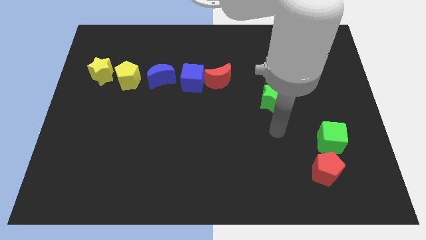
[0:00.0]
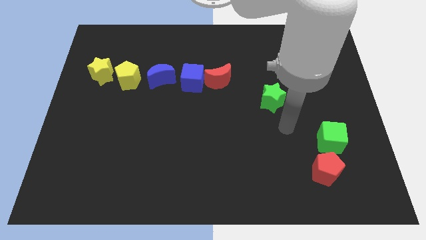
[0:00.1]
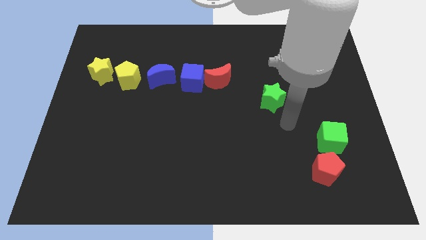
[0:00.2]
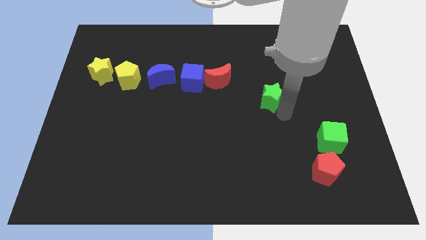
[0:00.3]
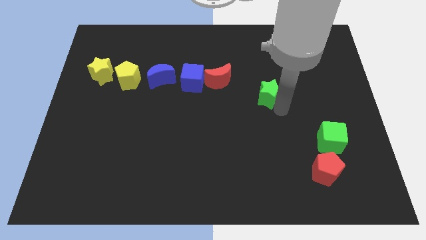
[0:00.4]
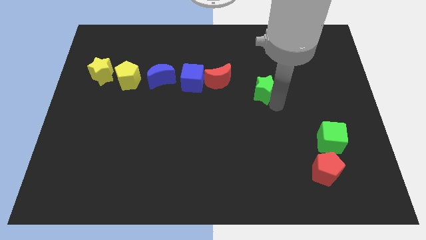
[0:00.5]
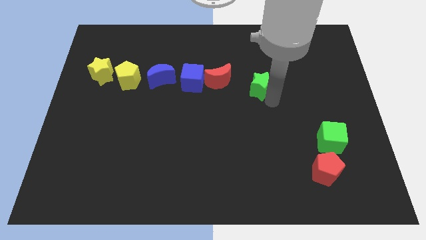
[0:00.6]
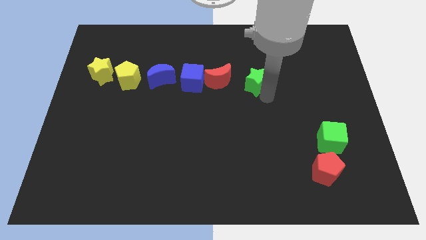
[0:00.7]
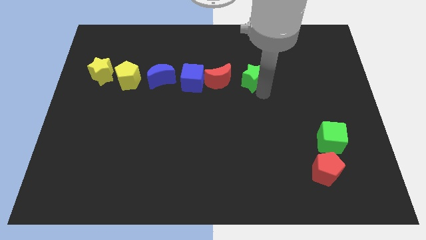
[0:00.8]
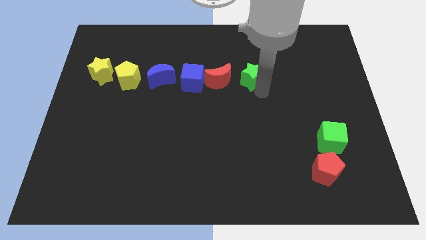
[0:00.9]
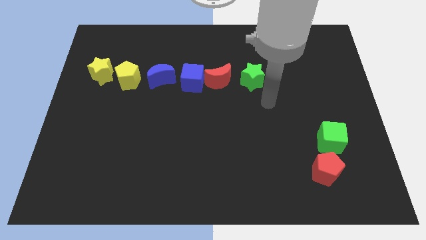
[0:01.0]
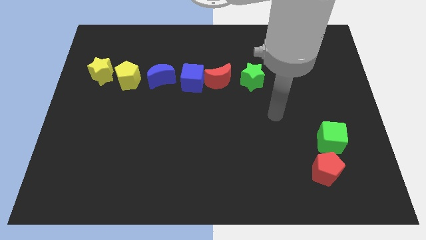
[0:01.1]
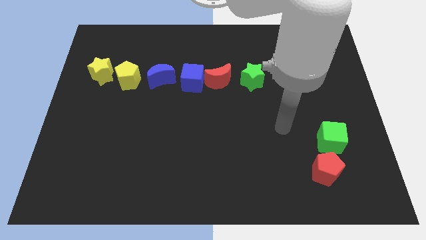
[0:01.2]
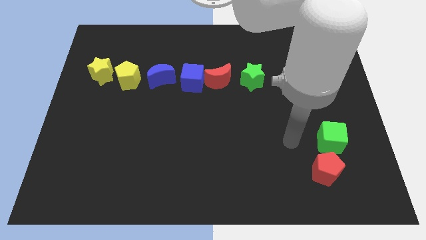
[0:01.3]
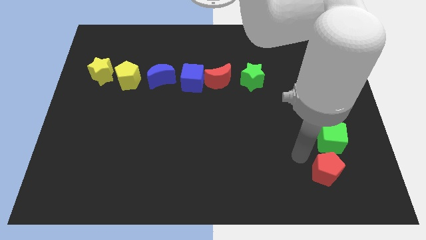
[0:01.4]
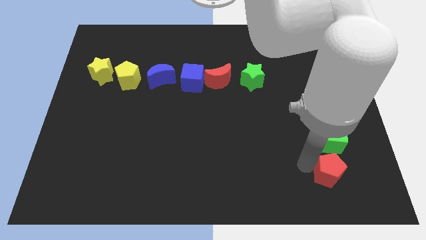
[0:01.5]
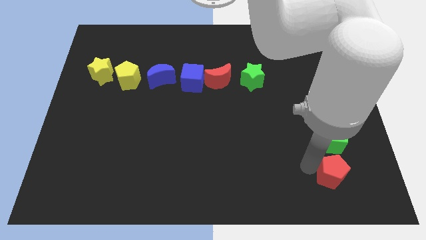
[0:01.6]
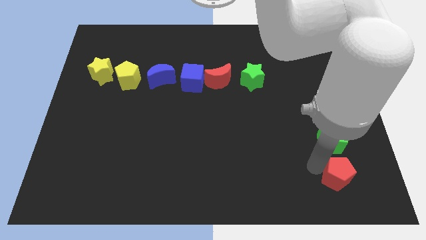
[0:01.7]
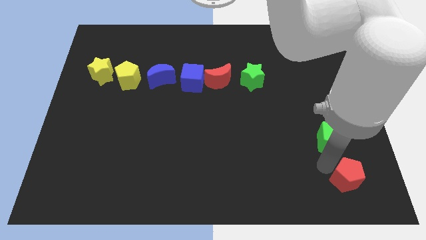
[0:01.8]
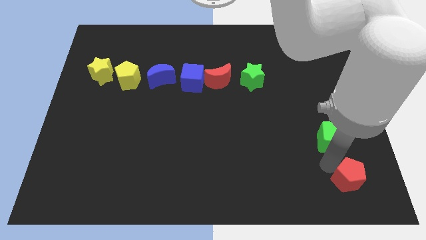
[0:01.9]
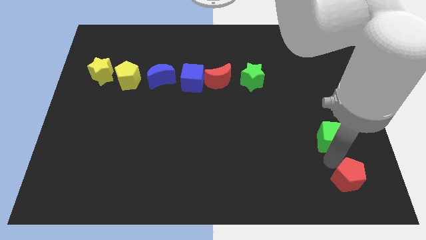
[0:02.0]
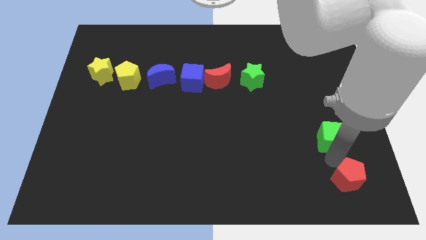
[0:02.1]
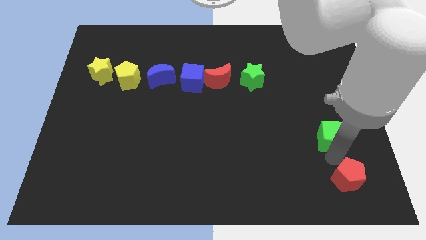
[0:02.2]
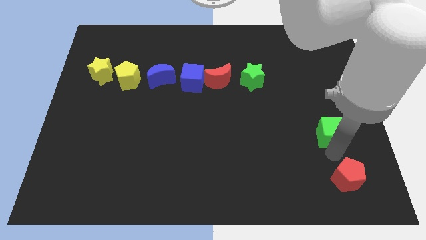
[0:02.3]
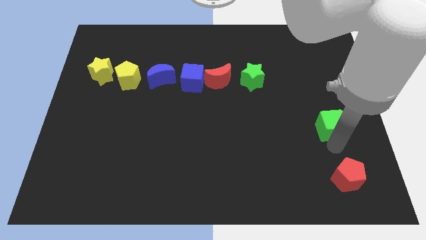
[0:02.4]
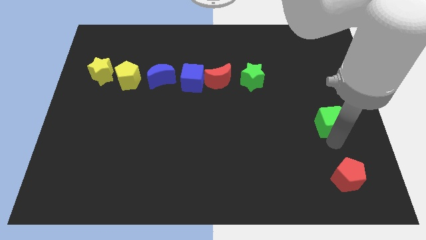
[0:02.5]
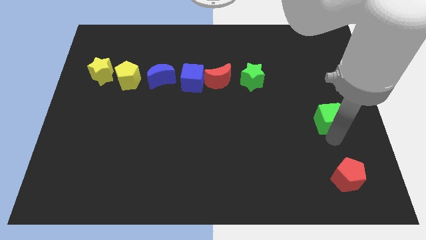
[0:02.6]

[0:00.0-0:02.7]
push green cube slightly towards upwards

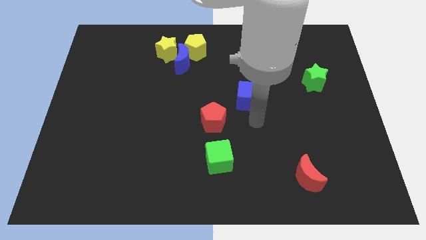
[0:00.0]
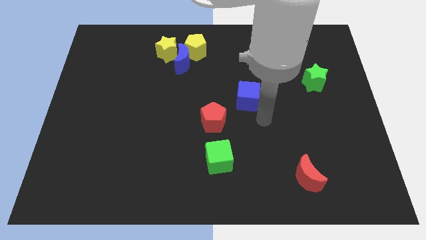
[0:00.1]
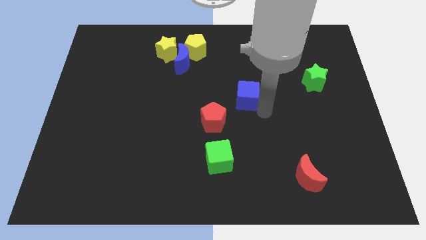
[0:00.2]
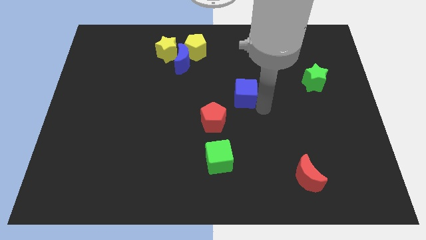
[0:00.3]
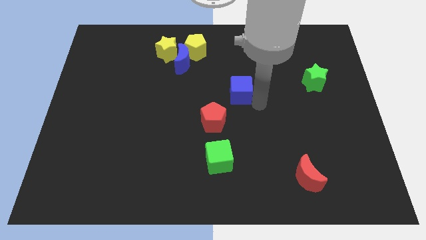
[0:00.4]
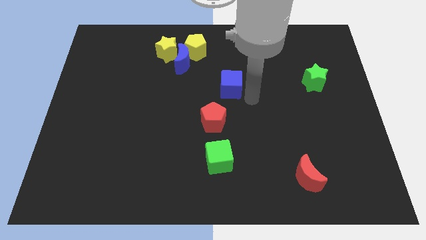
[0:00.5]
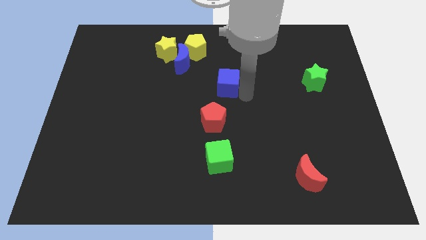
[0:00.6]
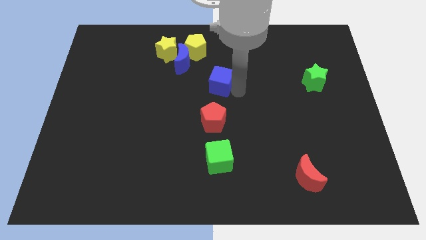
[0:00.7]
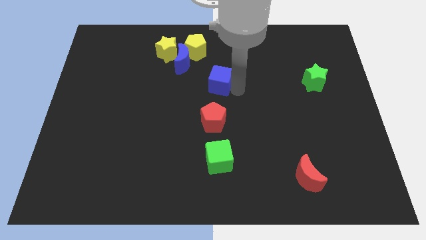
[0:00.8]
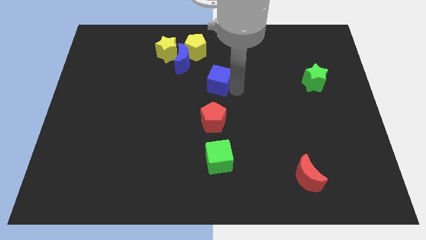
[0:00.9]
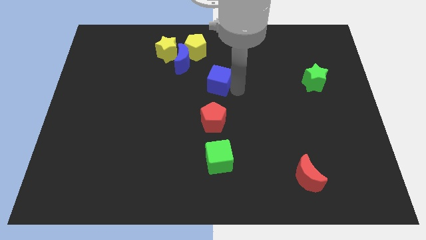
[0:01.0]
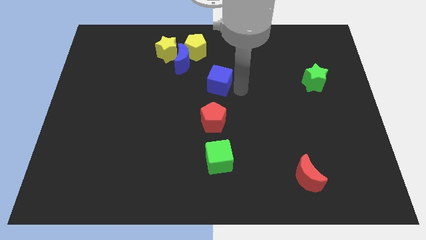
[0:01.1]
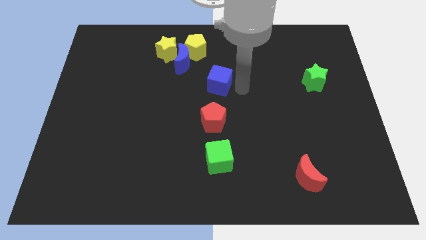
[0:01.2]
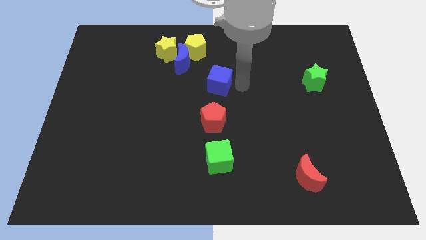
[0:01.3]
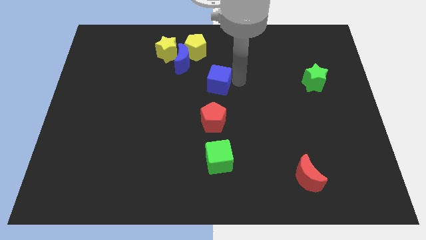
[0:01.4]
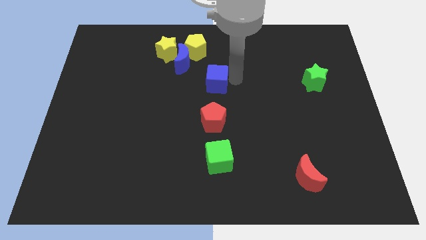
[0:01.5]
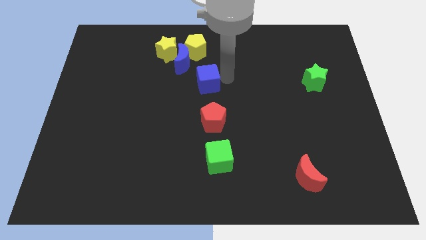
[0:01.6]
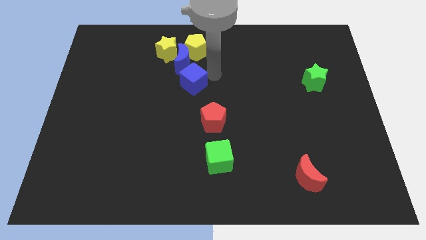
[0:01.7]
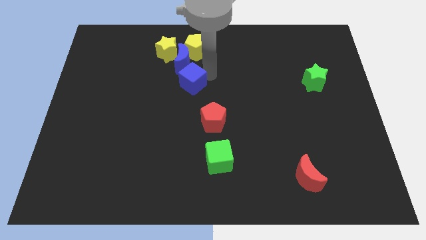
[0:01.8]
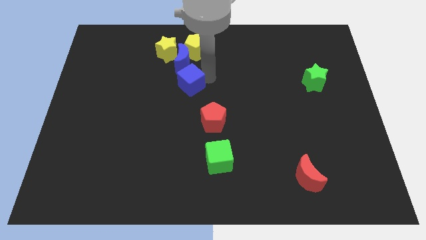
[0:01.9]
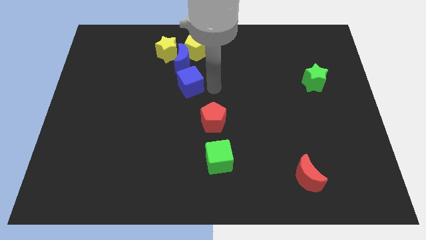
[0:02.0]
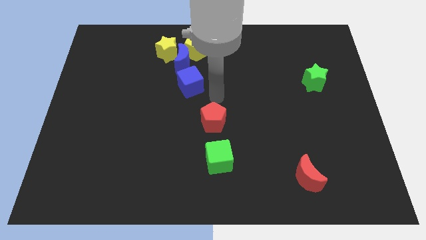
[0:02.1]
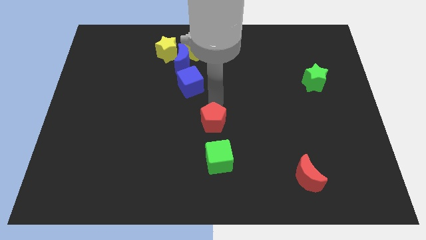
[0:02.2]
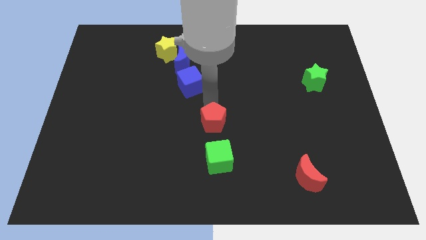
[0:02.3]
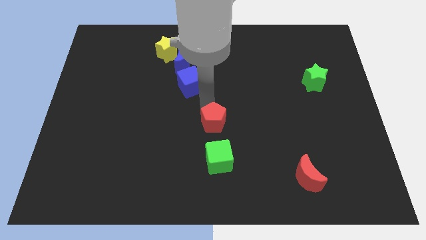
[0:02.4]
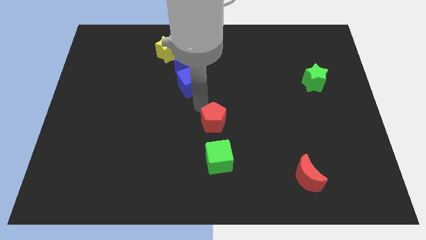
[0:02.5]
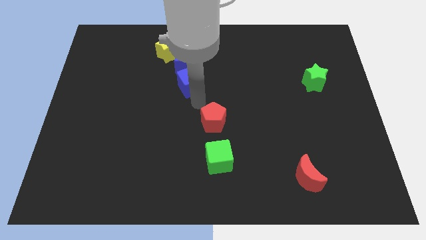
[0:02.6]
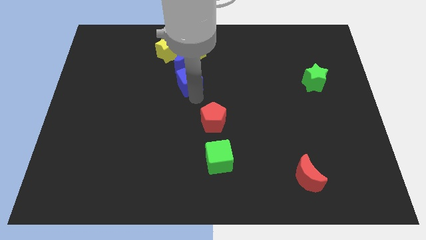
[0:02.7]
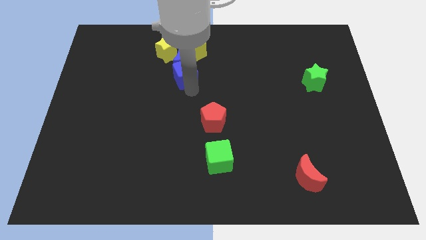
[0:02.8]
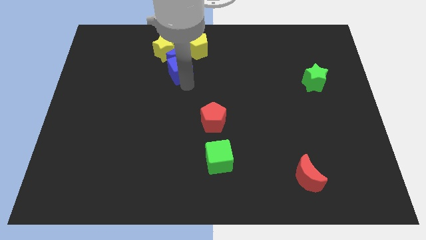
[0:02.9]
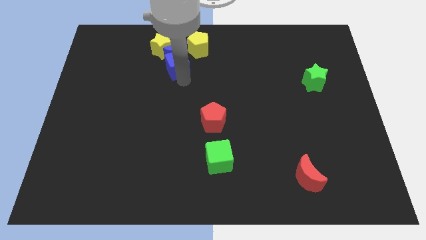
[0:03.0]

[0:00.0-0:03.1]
push blue cube towards blue moon

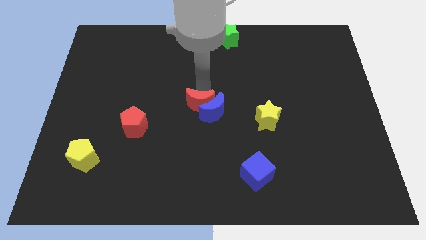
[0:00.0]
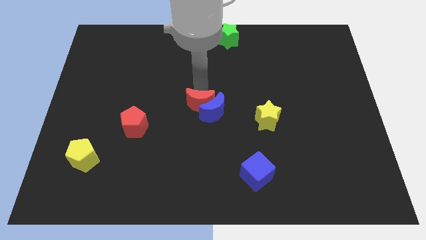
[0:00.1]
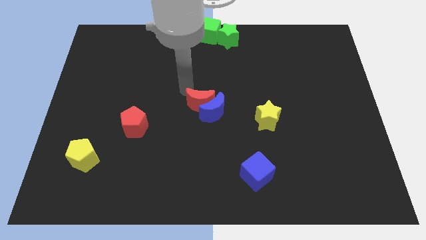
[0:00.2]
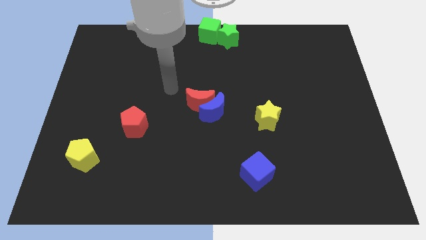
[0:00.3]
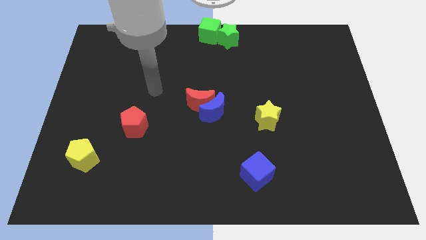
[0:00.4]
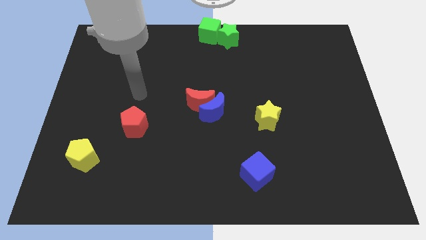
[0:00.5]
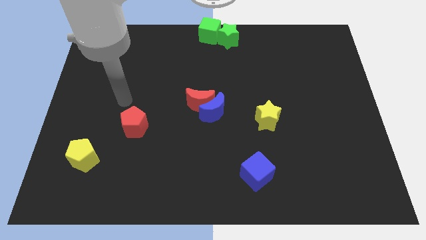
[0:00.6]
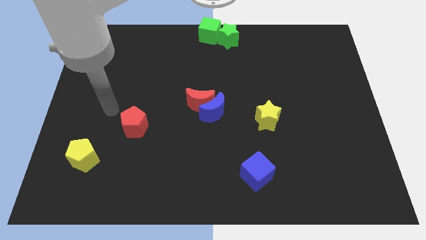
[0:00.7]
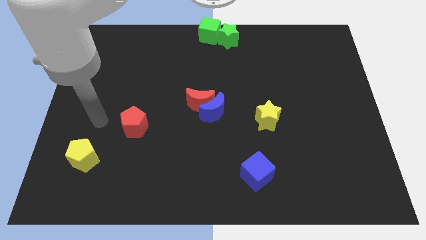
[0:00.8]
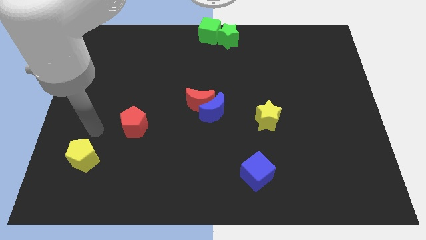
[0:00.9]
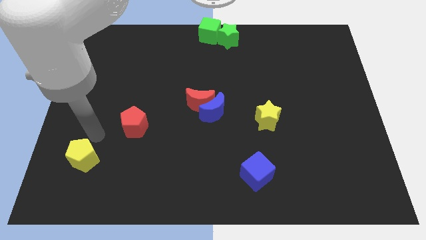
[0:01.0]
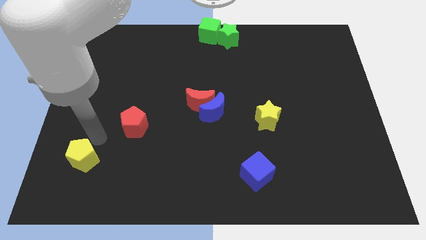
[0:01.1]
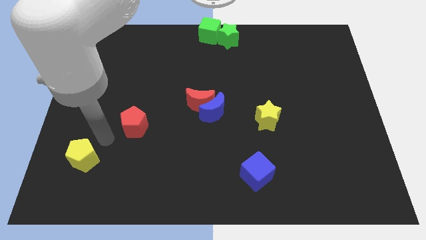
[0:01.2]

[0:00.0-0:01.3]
move yourself away from the red moon

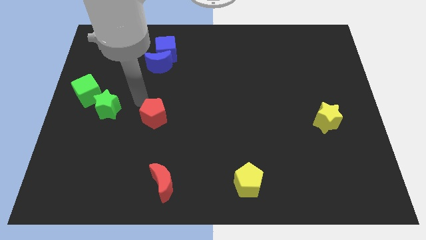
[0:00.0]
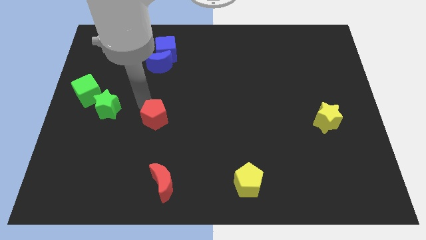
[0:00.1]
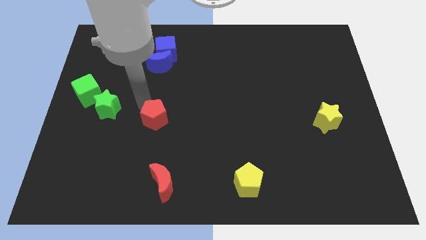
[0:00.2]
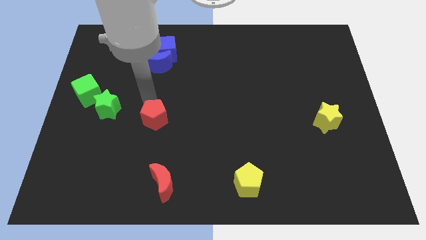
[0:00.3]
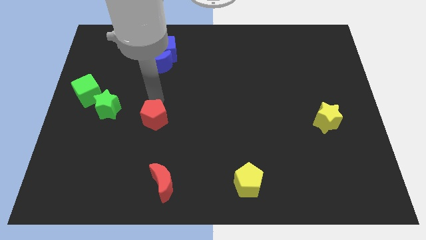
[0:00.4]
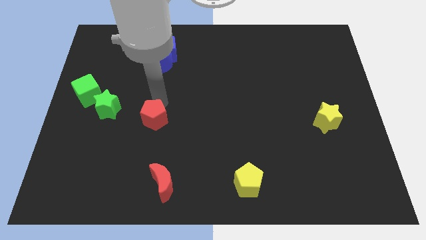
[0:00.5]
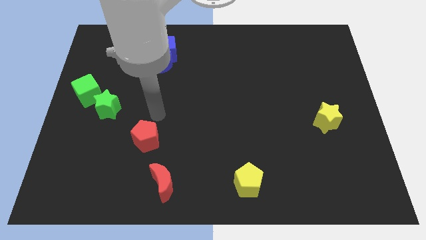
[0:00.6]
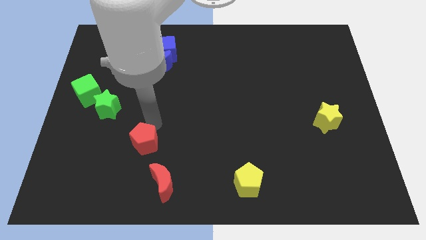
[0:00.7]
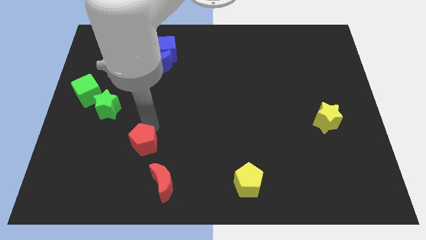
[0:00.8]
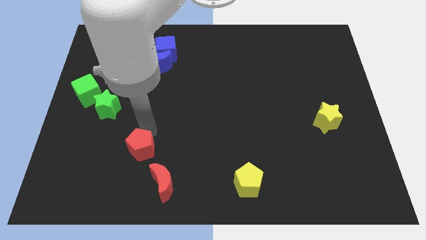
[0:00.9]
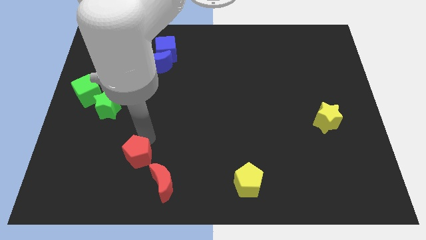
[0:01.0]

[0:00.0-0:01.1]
push the red pentagon to the top left to the red crescent

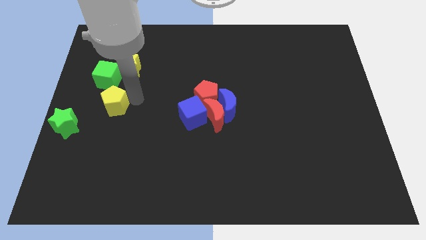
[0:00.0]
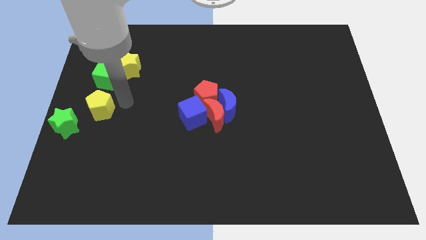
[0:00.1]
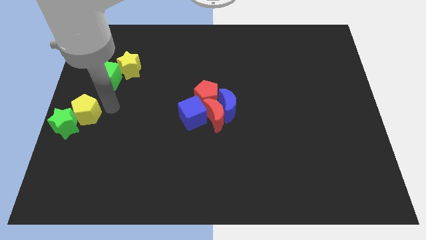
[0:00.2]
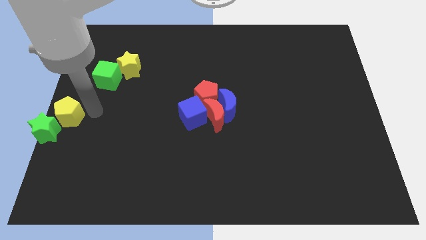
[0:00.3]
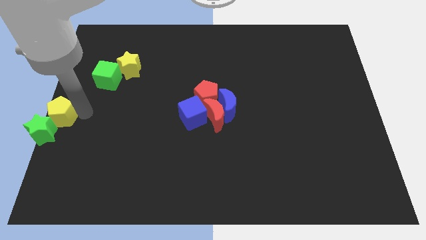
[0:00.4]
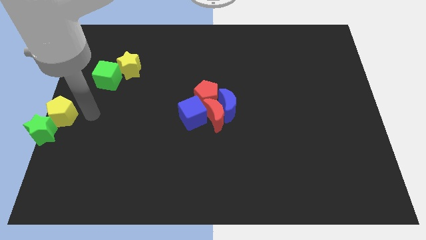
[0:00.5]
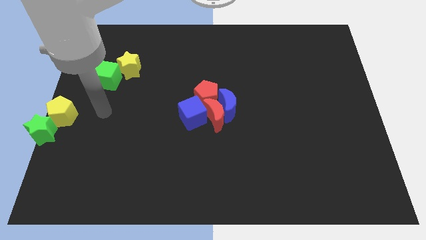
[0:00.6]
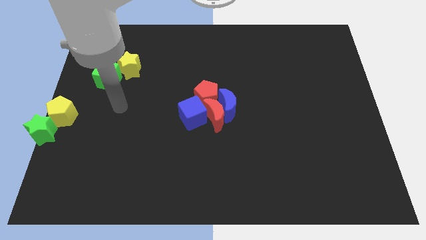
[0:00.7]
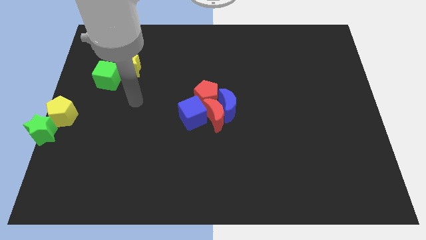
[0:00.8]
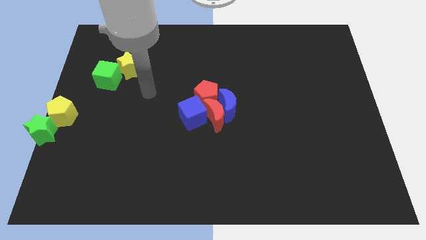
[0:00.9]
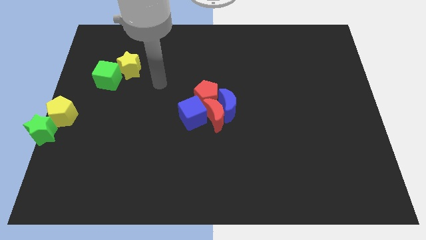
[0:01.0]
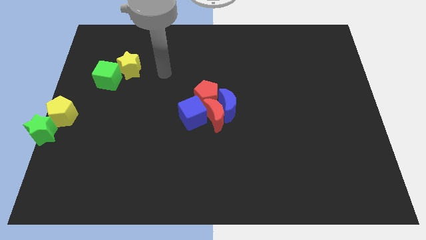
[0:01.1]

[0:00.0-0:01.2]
push the yellow pentagon into the green star
